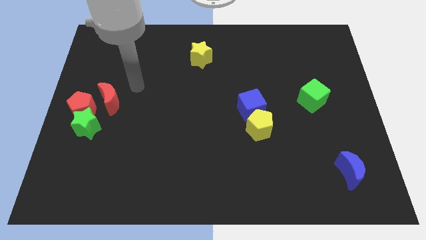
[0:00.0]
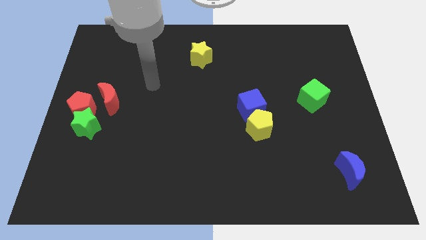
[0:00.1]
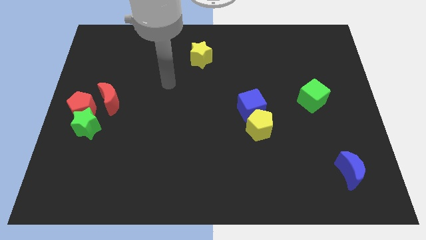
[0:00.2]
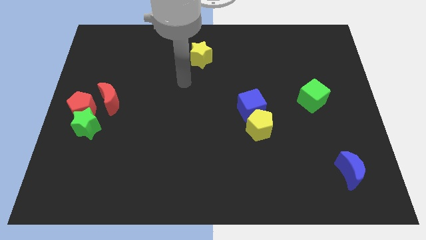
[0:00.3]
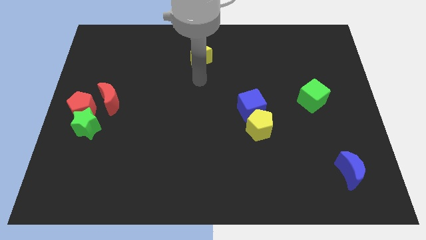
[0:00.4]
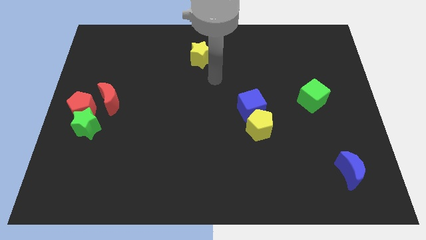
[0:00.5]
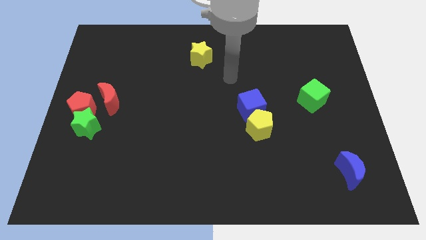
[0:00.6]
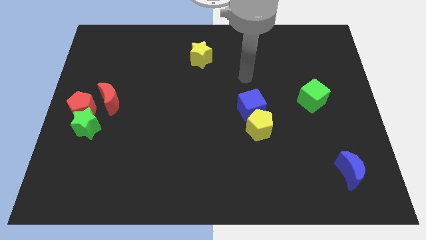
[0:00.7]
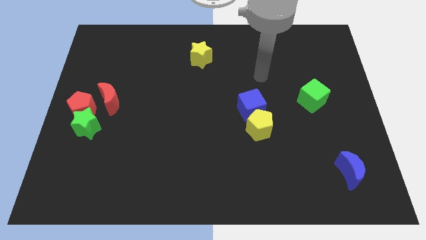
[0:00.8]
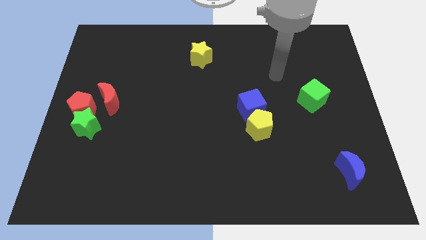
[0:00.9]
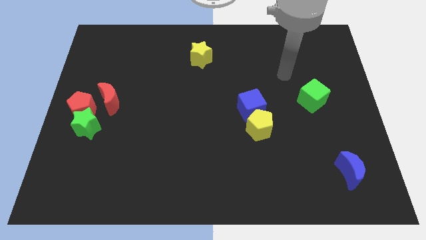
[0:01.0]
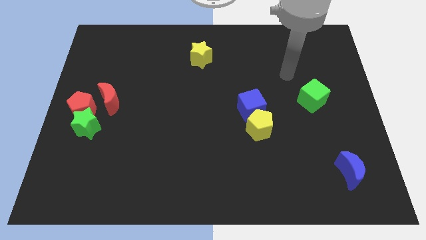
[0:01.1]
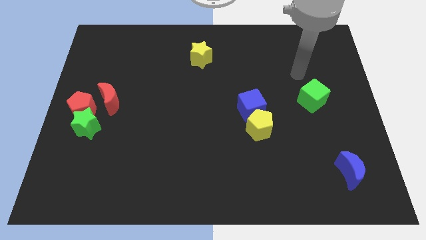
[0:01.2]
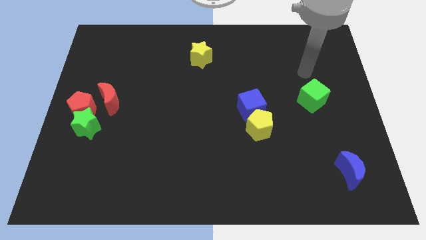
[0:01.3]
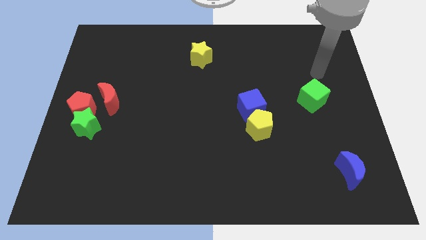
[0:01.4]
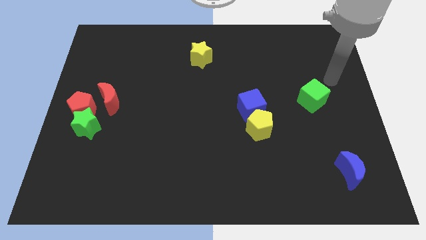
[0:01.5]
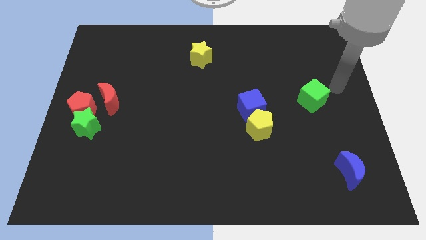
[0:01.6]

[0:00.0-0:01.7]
point your hand at the top right side of the green cube

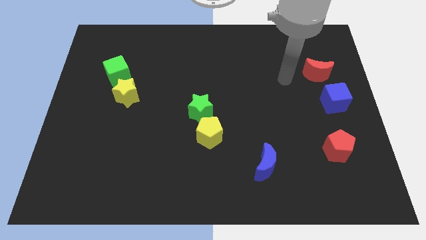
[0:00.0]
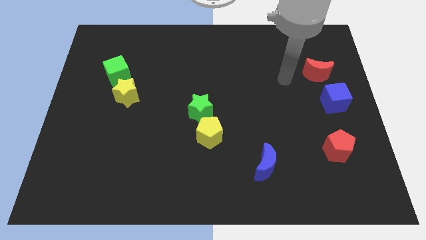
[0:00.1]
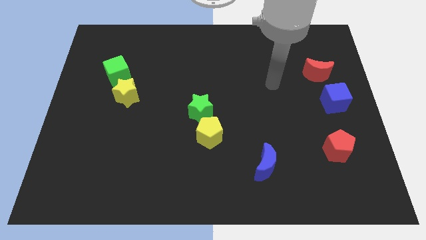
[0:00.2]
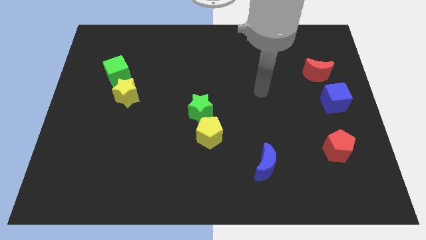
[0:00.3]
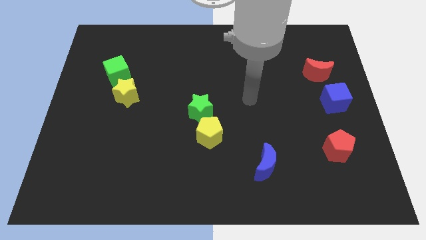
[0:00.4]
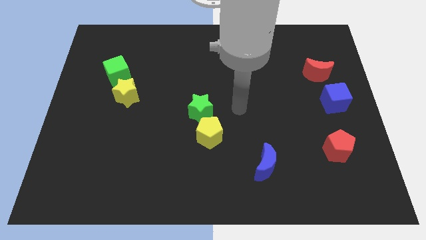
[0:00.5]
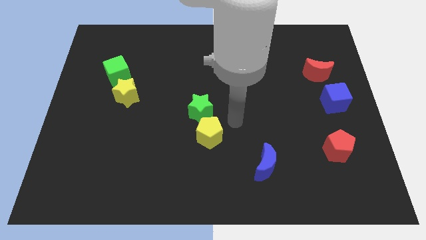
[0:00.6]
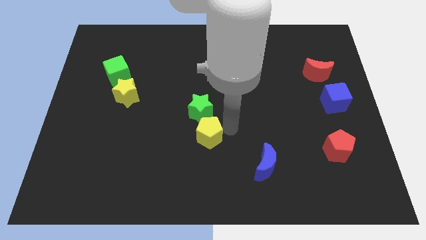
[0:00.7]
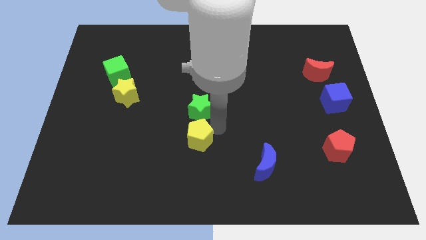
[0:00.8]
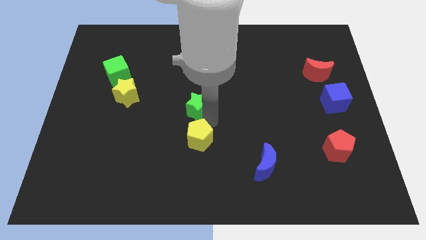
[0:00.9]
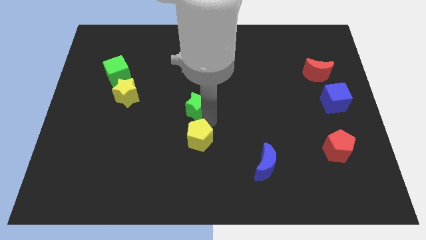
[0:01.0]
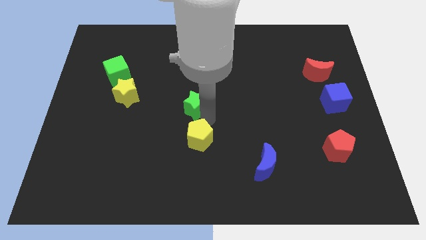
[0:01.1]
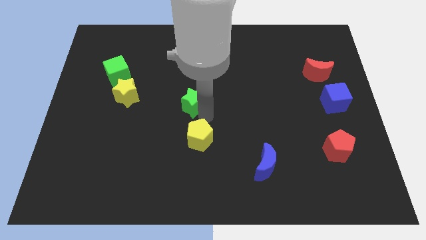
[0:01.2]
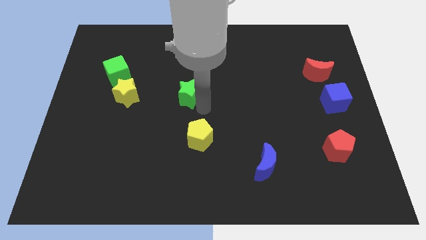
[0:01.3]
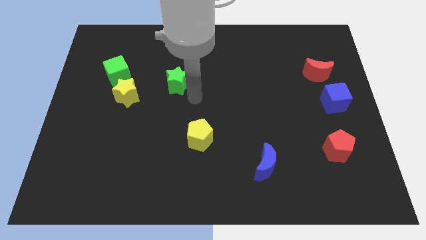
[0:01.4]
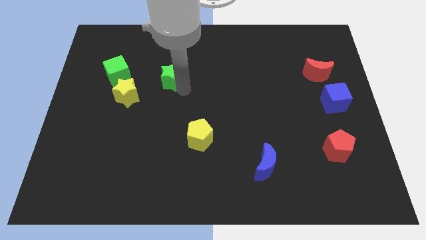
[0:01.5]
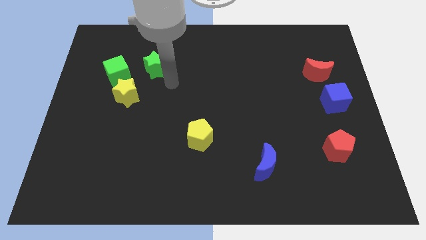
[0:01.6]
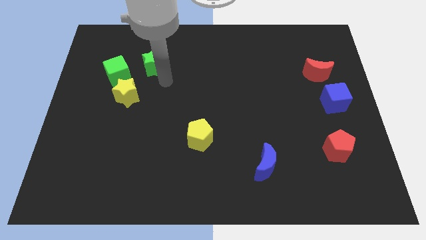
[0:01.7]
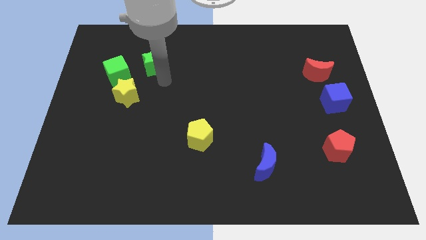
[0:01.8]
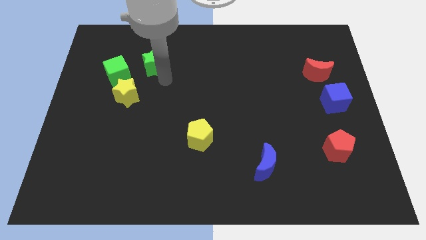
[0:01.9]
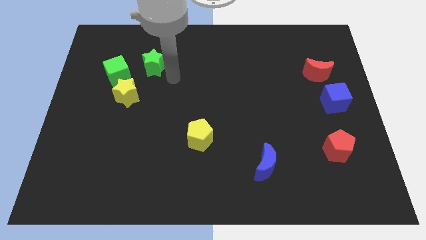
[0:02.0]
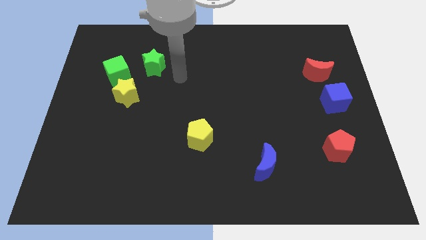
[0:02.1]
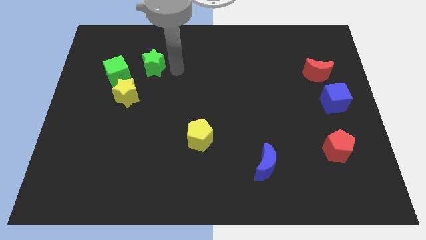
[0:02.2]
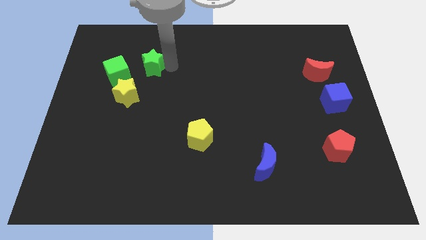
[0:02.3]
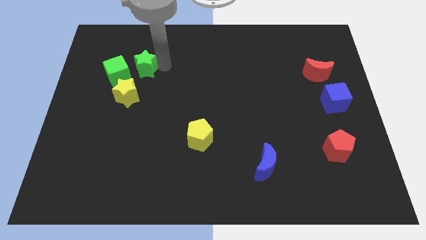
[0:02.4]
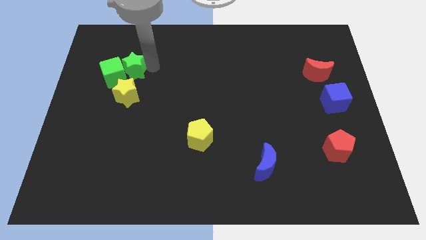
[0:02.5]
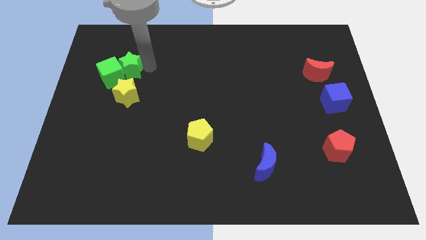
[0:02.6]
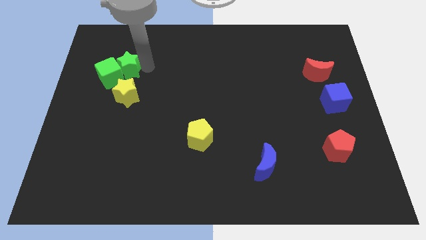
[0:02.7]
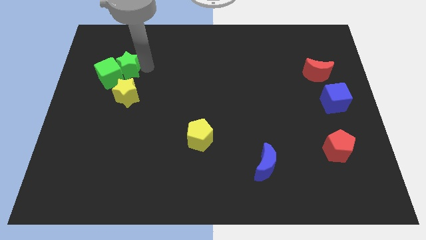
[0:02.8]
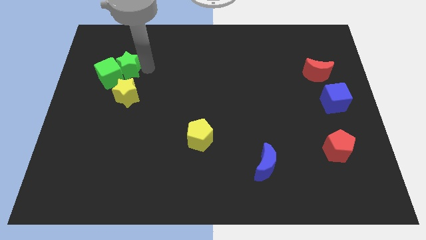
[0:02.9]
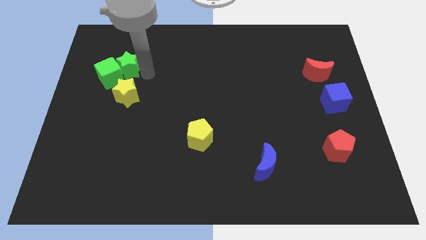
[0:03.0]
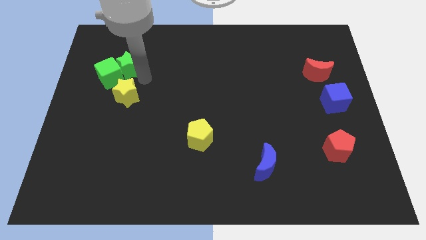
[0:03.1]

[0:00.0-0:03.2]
push the green star into the green cube

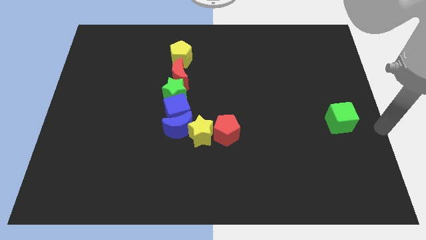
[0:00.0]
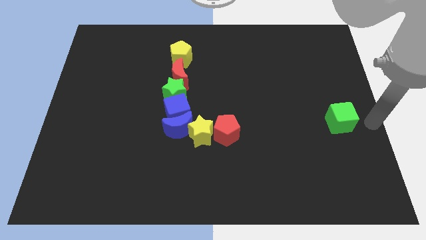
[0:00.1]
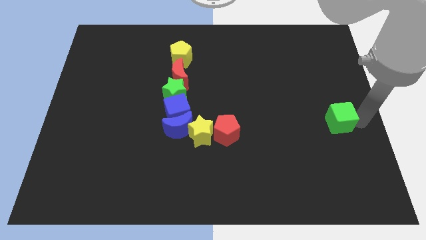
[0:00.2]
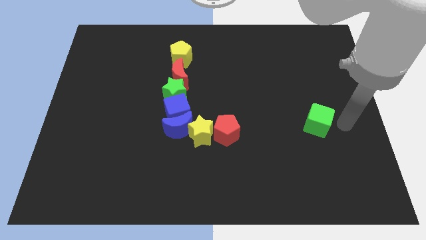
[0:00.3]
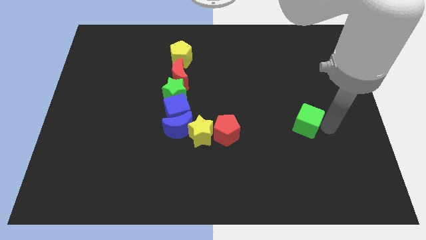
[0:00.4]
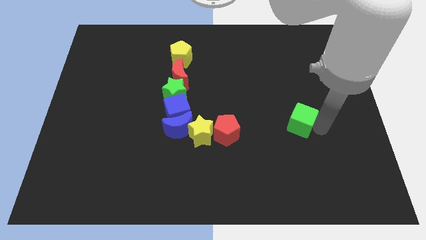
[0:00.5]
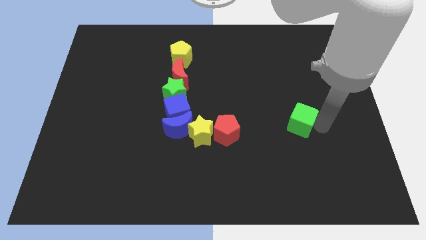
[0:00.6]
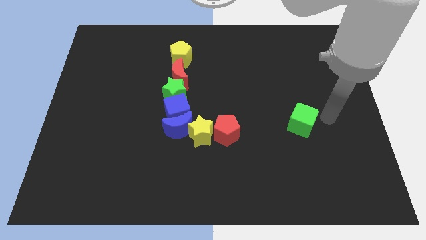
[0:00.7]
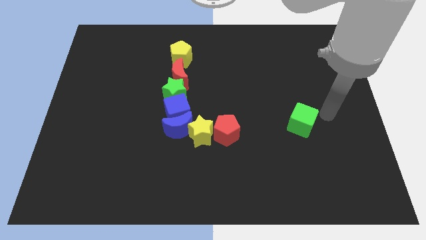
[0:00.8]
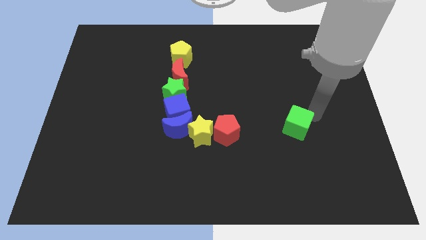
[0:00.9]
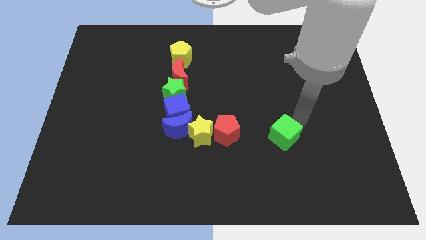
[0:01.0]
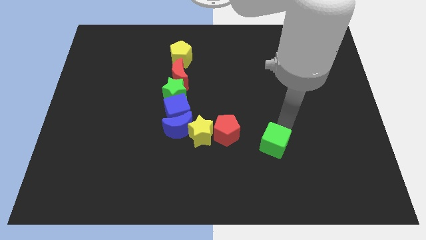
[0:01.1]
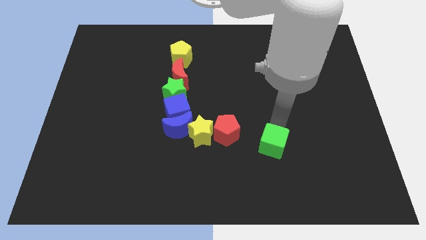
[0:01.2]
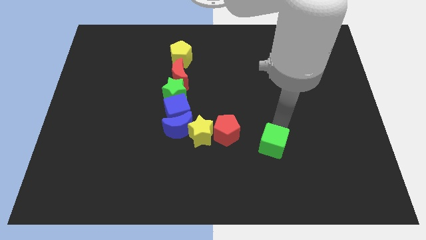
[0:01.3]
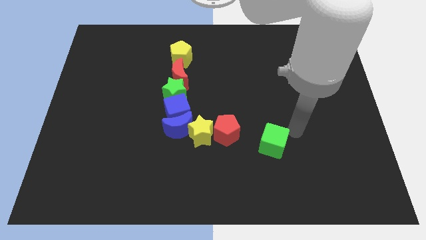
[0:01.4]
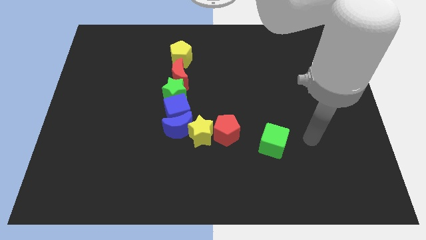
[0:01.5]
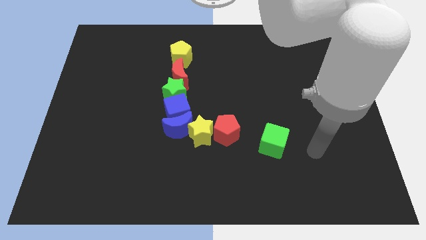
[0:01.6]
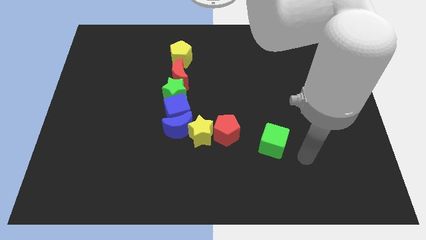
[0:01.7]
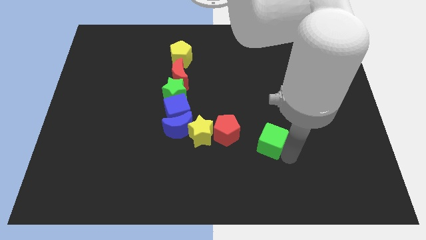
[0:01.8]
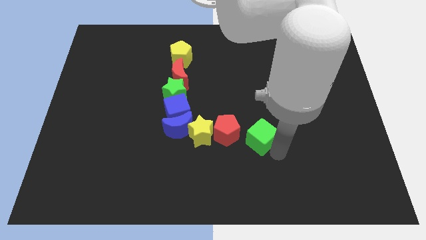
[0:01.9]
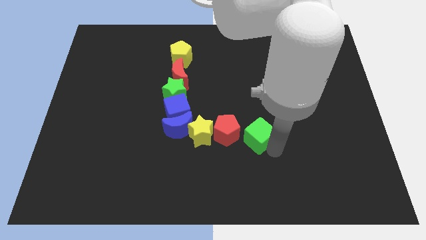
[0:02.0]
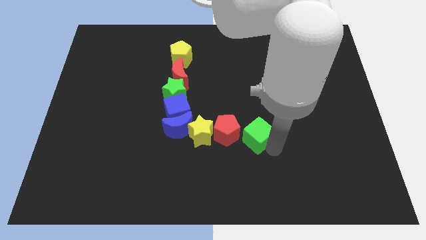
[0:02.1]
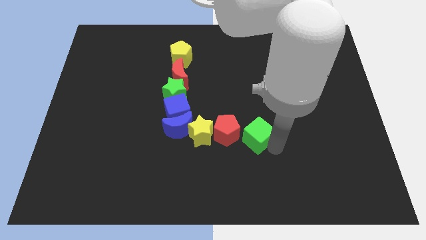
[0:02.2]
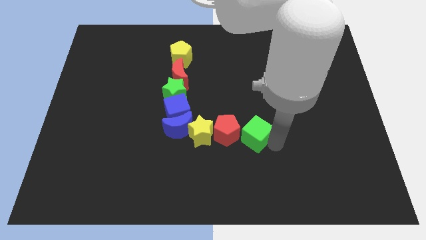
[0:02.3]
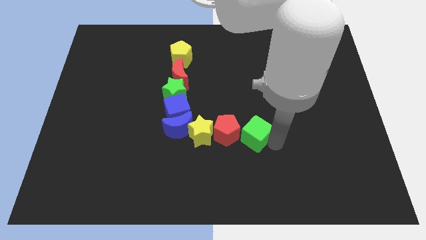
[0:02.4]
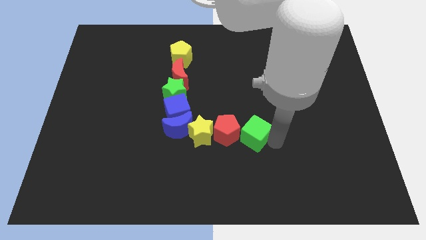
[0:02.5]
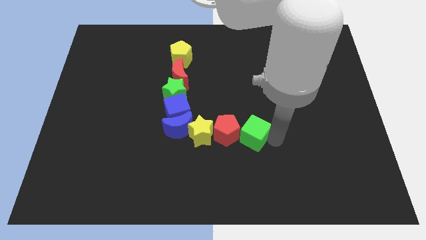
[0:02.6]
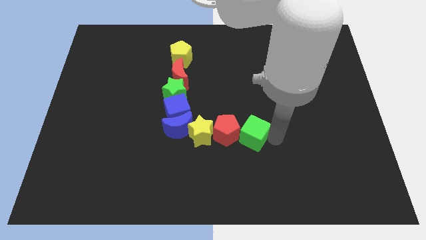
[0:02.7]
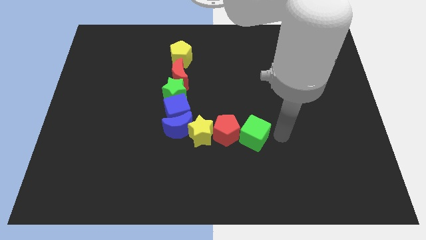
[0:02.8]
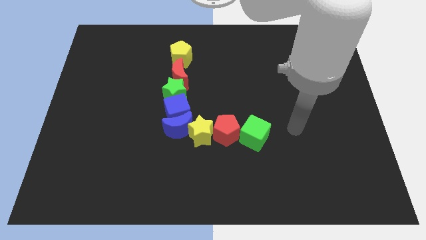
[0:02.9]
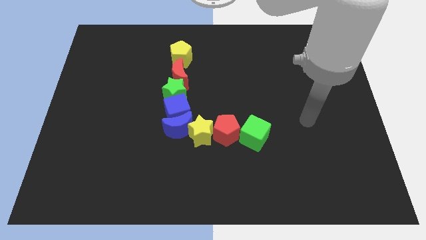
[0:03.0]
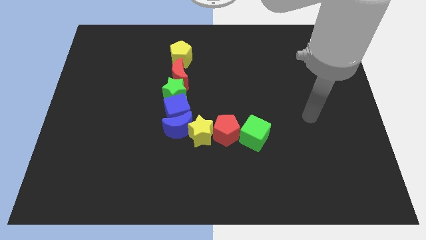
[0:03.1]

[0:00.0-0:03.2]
push the green cube into the red pentagon

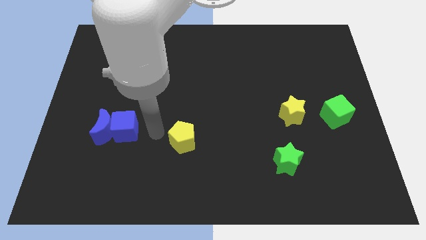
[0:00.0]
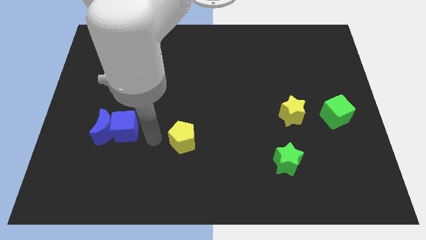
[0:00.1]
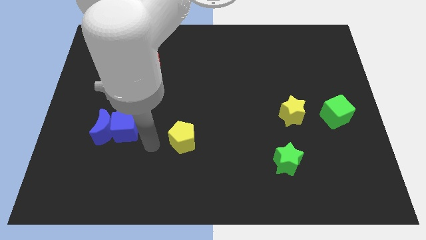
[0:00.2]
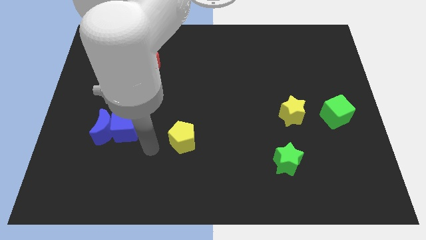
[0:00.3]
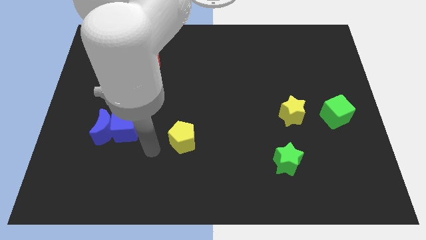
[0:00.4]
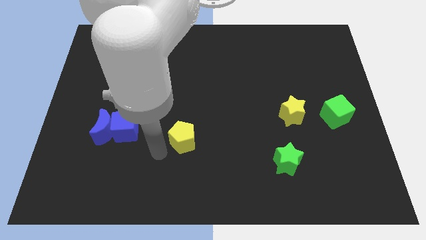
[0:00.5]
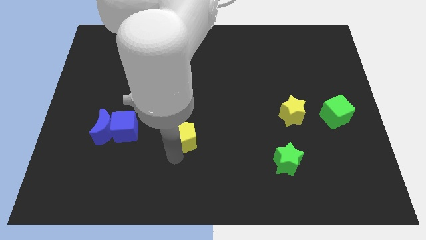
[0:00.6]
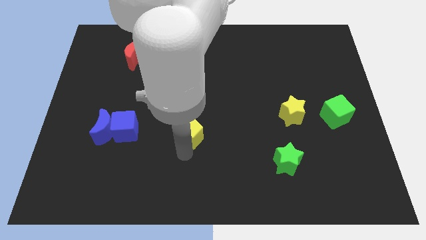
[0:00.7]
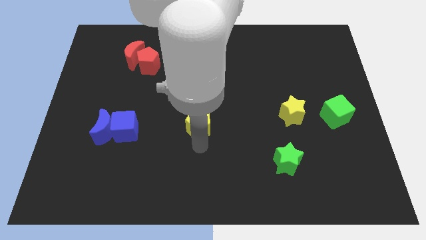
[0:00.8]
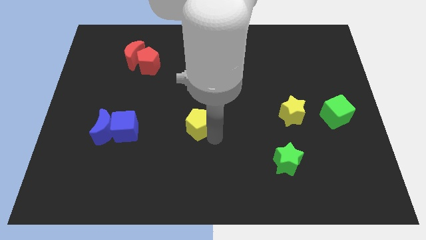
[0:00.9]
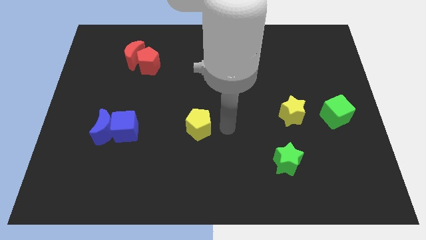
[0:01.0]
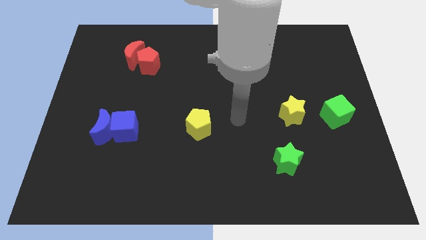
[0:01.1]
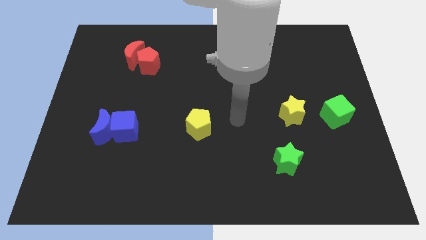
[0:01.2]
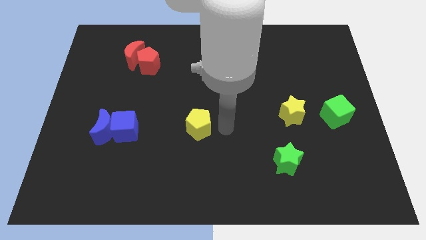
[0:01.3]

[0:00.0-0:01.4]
push the yellow pentagon between the blue cube and yellow star
